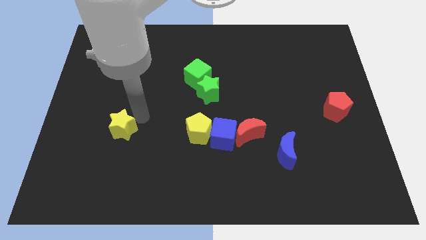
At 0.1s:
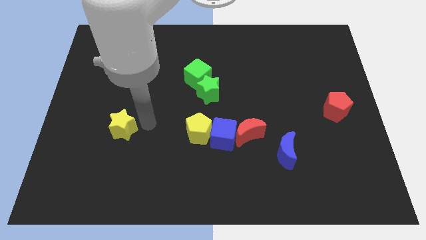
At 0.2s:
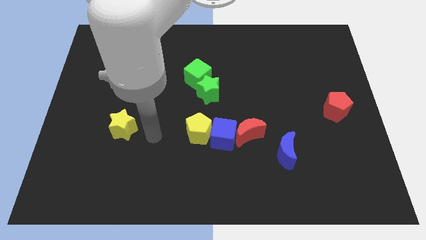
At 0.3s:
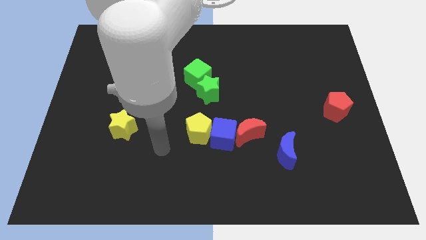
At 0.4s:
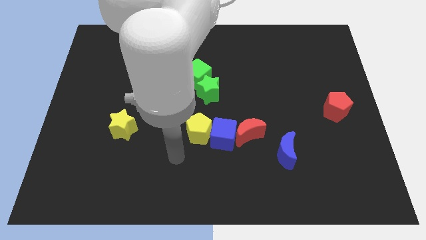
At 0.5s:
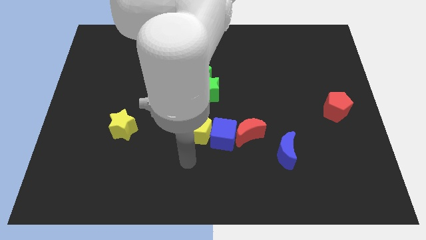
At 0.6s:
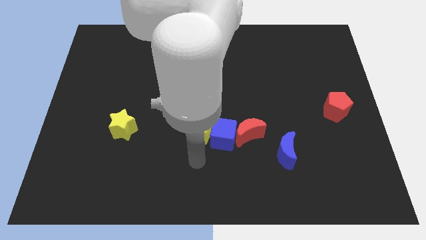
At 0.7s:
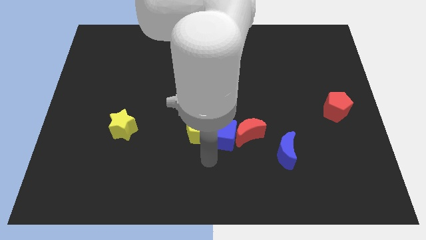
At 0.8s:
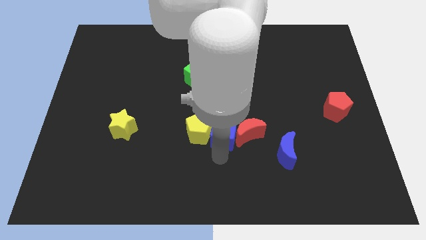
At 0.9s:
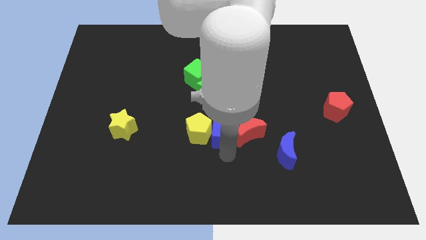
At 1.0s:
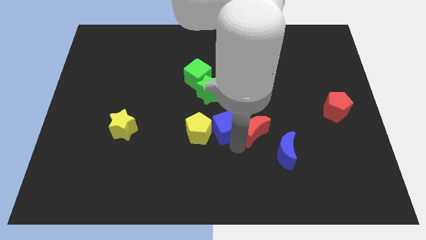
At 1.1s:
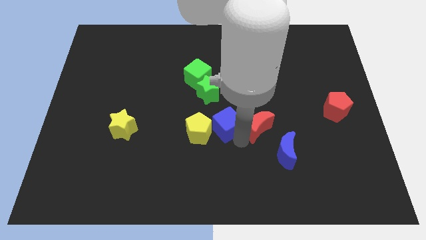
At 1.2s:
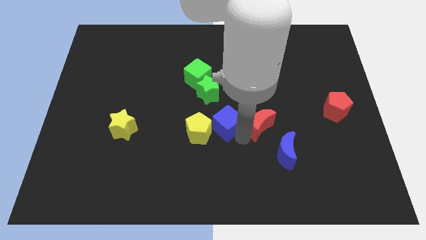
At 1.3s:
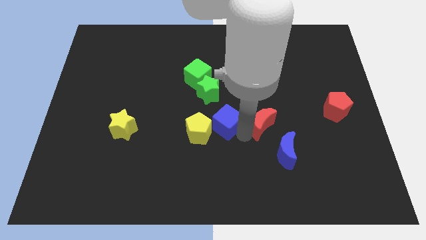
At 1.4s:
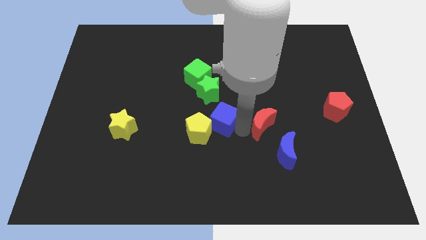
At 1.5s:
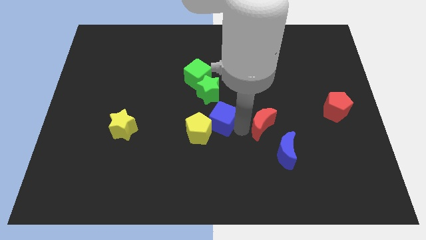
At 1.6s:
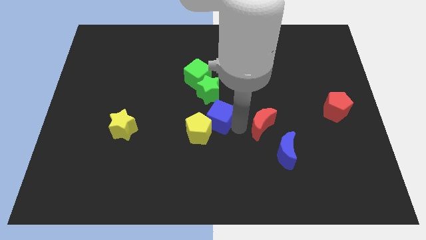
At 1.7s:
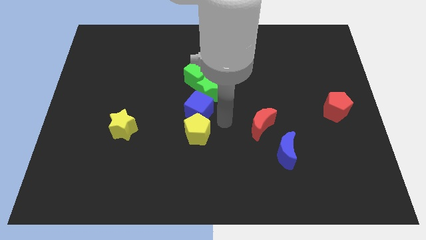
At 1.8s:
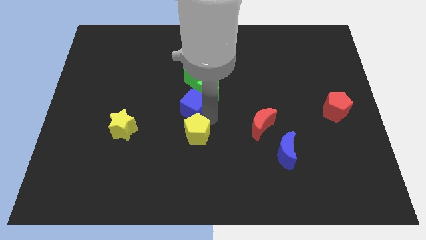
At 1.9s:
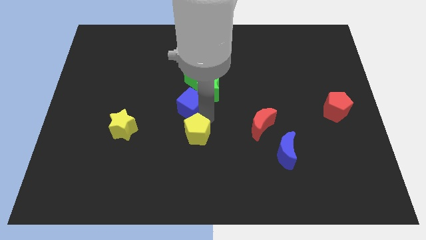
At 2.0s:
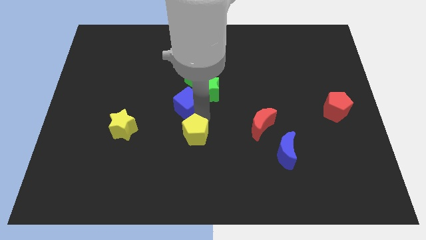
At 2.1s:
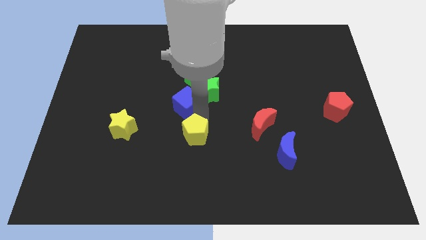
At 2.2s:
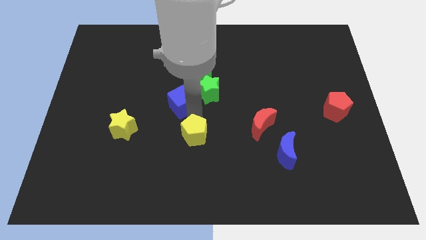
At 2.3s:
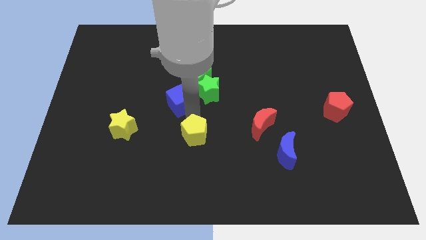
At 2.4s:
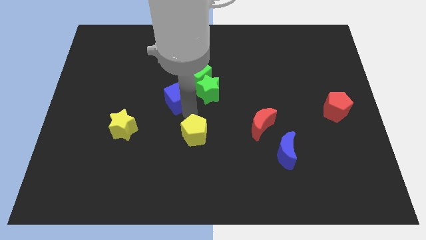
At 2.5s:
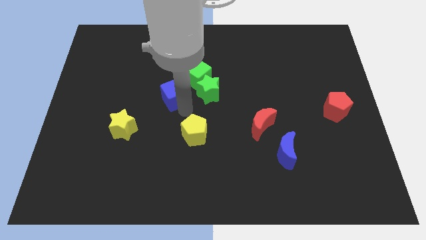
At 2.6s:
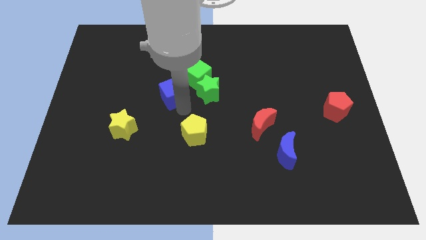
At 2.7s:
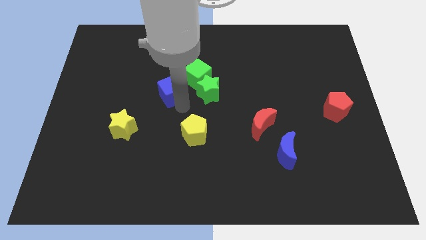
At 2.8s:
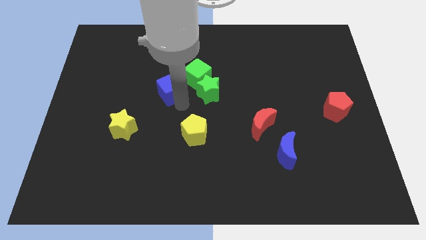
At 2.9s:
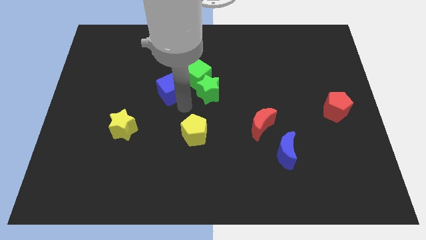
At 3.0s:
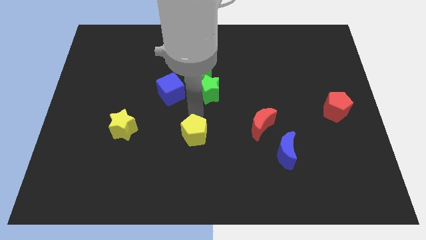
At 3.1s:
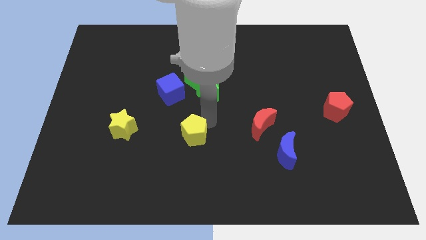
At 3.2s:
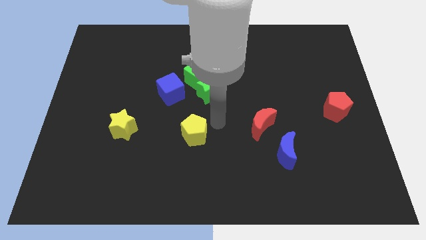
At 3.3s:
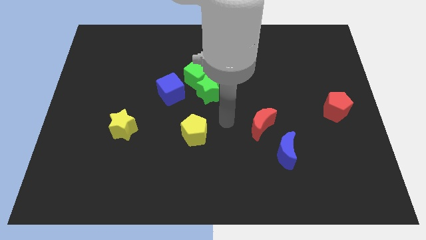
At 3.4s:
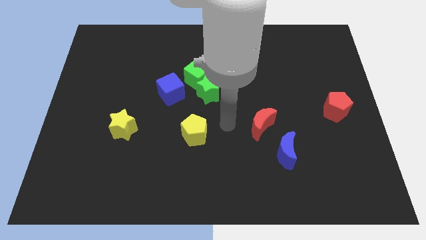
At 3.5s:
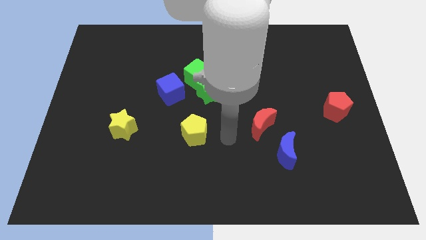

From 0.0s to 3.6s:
move the blue cube diagonally top left to the yellow pentagon

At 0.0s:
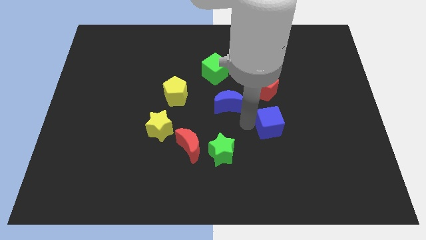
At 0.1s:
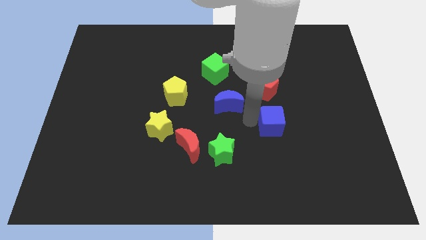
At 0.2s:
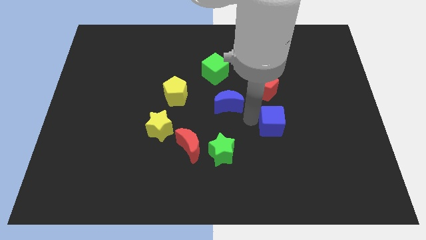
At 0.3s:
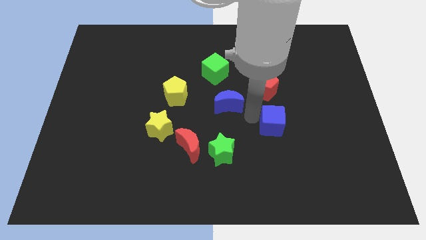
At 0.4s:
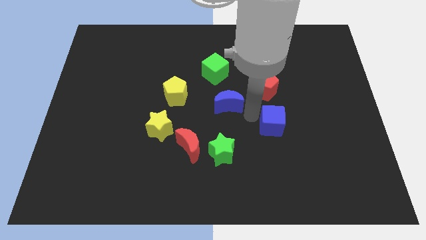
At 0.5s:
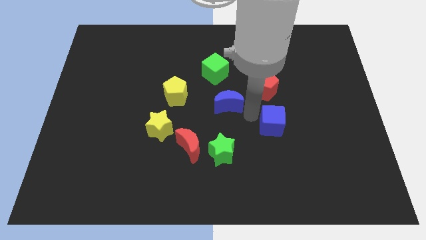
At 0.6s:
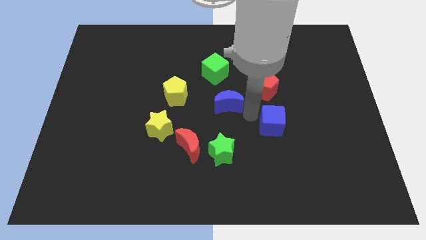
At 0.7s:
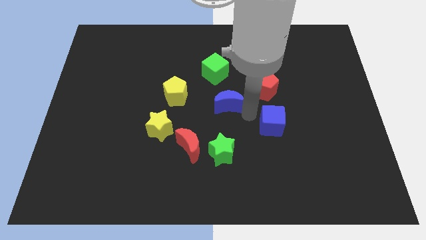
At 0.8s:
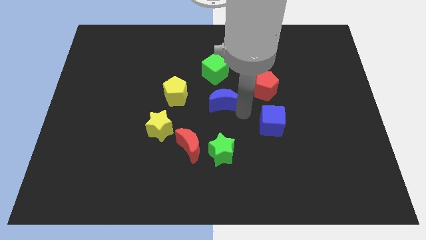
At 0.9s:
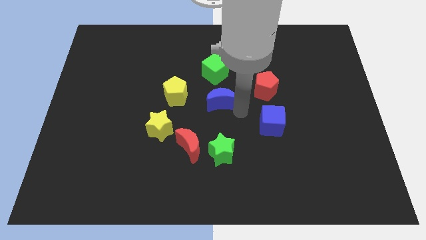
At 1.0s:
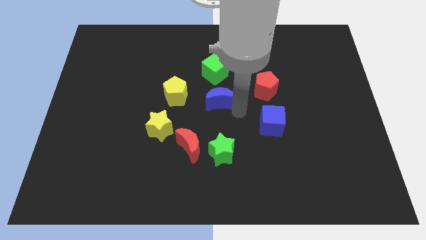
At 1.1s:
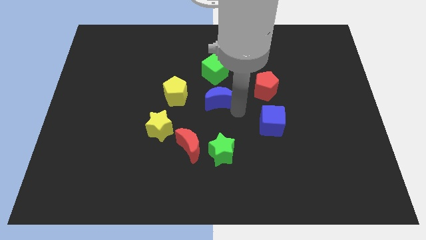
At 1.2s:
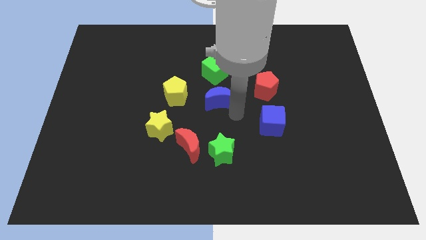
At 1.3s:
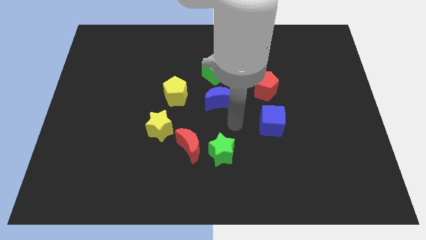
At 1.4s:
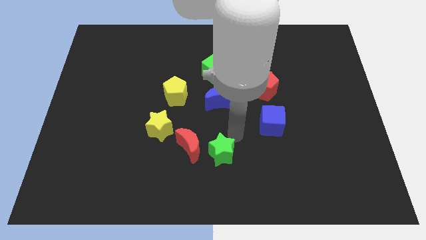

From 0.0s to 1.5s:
put the blue moon in between the green blocks

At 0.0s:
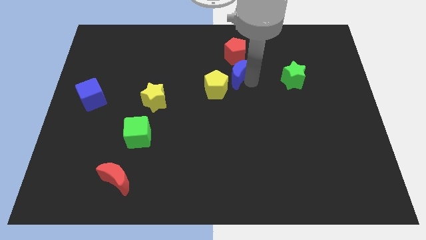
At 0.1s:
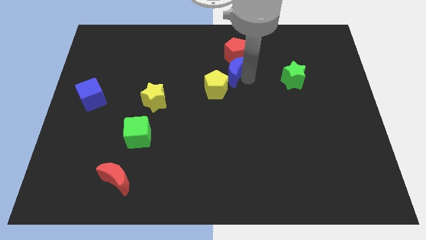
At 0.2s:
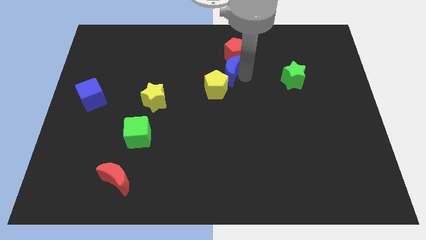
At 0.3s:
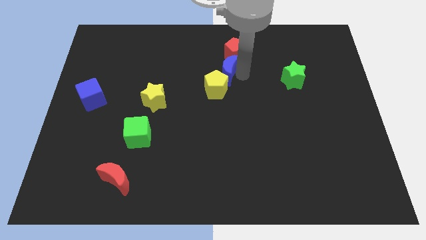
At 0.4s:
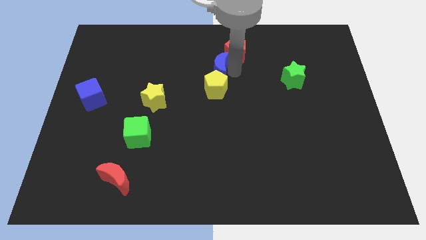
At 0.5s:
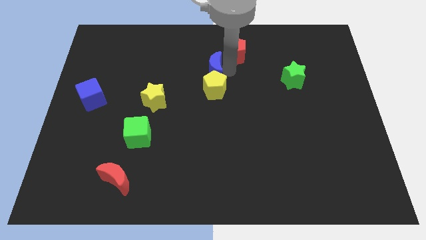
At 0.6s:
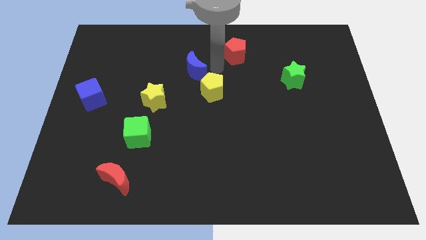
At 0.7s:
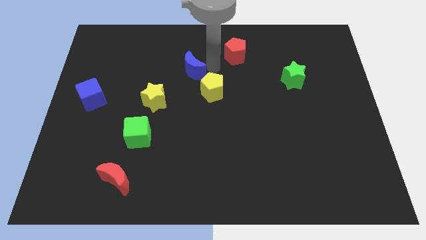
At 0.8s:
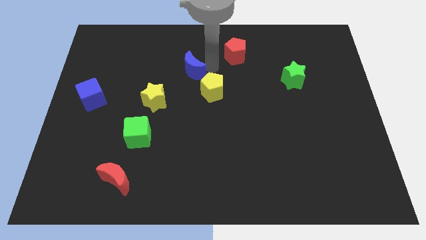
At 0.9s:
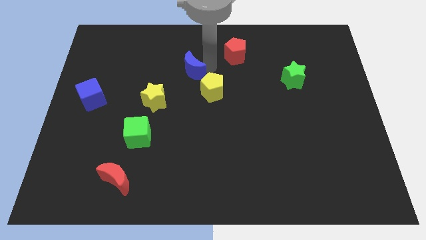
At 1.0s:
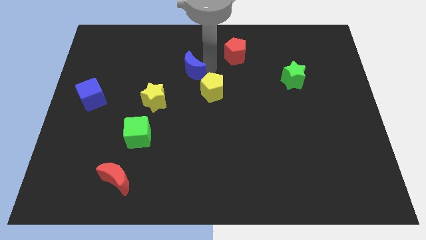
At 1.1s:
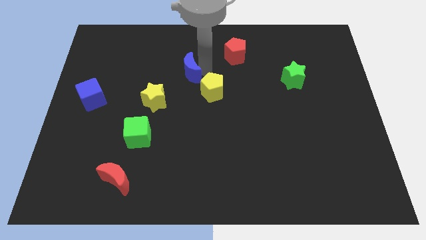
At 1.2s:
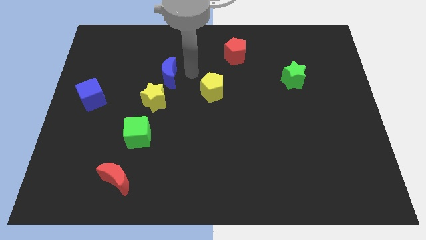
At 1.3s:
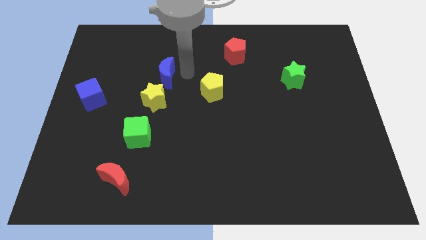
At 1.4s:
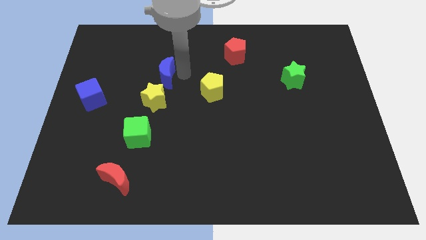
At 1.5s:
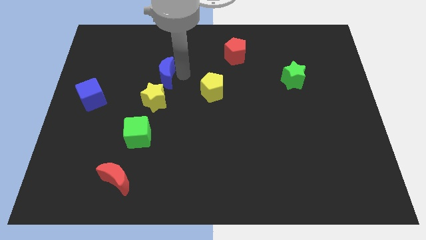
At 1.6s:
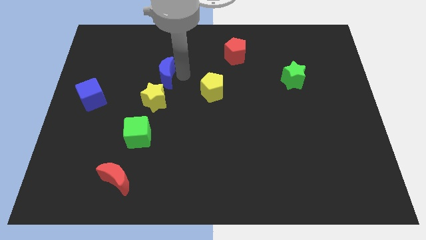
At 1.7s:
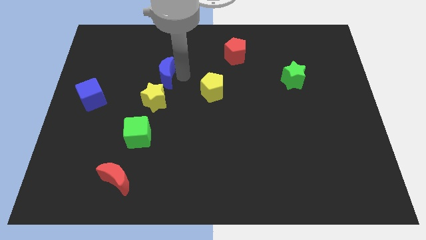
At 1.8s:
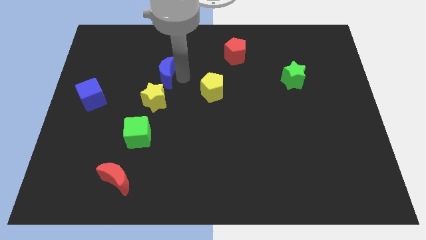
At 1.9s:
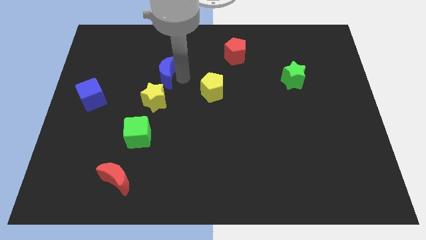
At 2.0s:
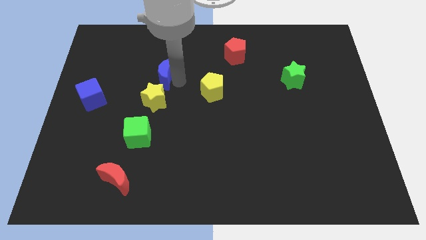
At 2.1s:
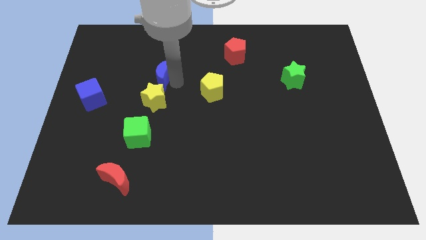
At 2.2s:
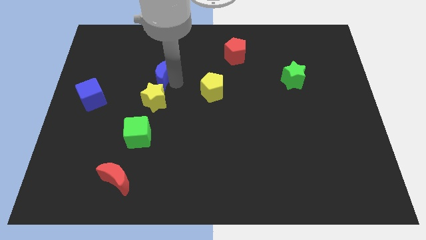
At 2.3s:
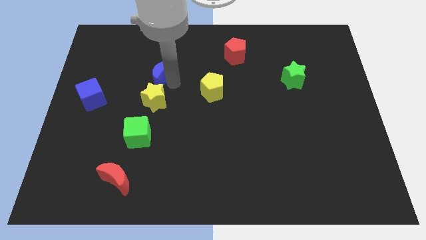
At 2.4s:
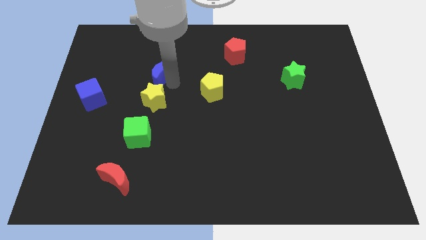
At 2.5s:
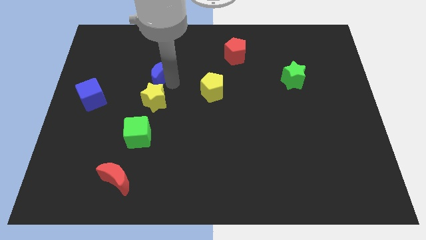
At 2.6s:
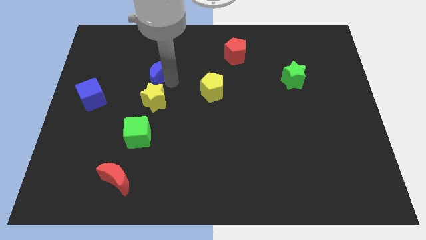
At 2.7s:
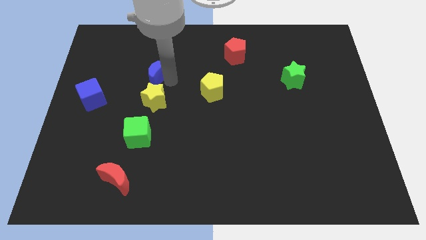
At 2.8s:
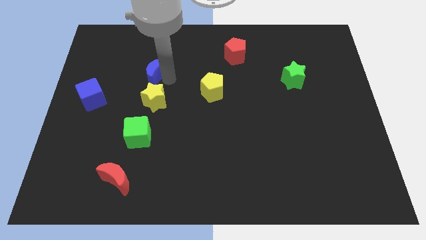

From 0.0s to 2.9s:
push blue crescent above yellow star

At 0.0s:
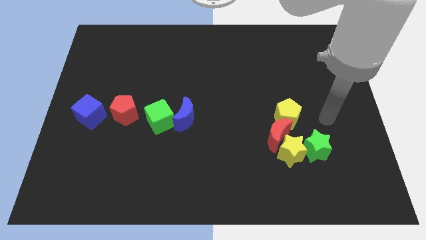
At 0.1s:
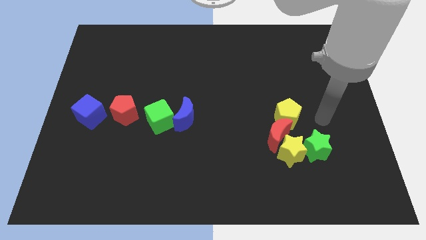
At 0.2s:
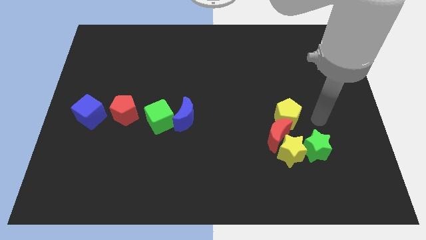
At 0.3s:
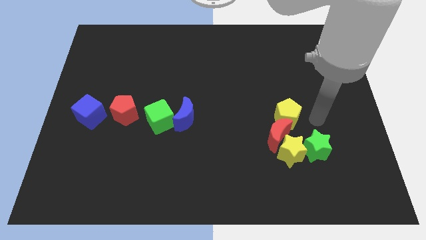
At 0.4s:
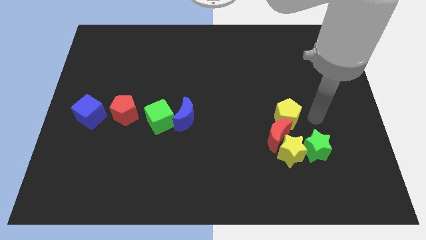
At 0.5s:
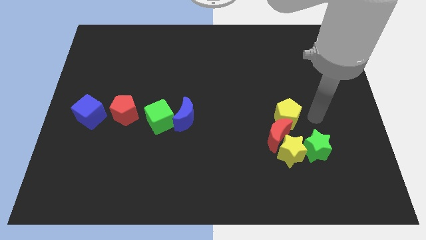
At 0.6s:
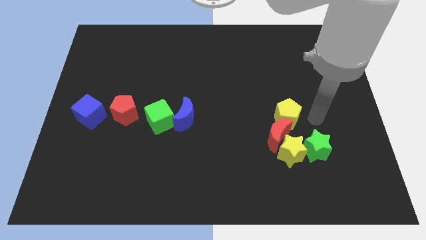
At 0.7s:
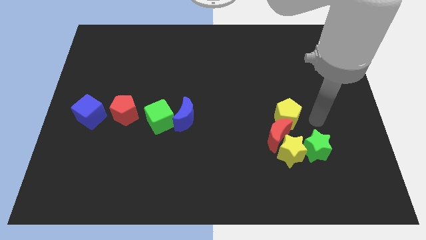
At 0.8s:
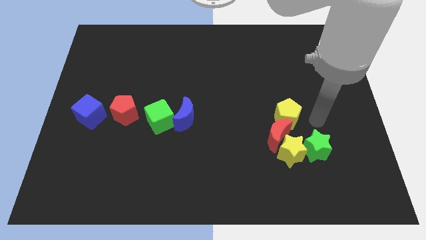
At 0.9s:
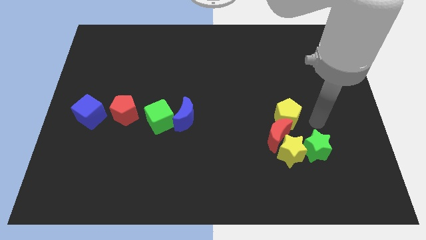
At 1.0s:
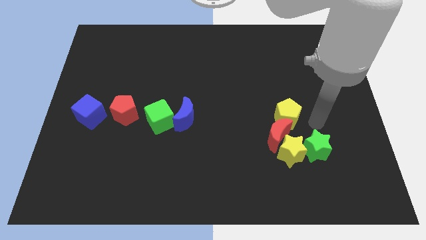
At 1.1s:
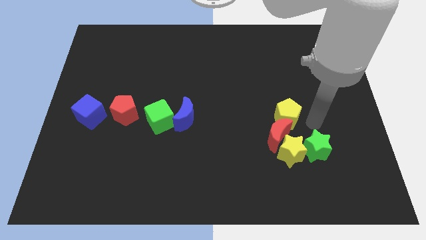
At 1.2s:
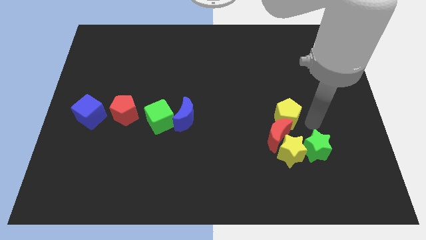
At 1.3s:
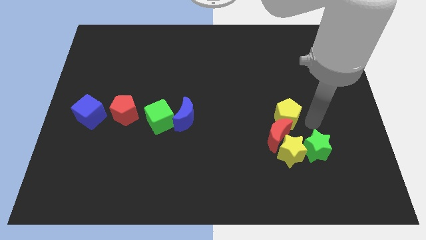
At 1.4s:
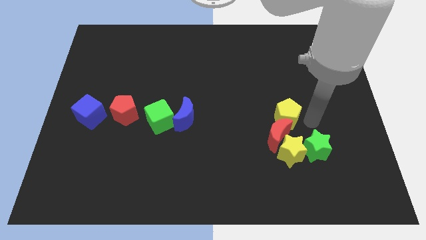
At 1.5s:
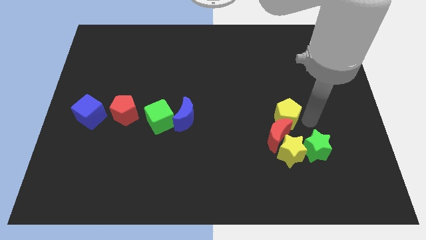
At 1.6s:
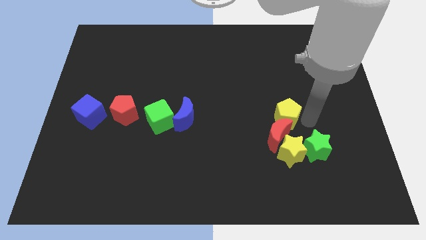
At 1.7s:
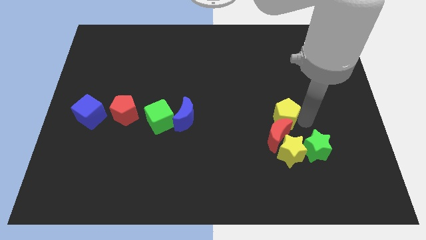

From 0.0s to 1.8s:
move your arm towards the yellow pentagon
